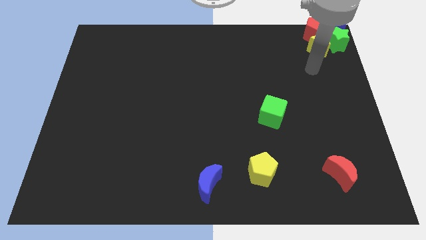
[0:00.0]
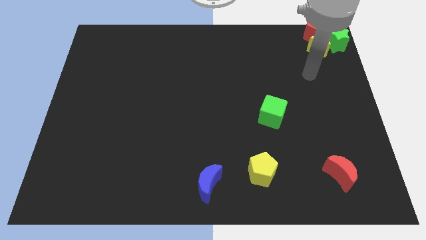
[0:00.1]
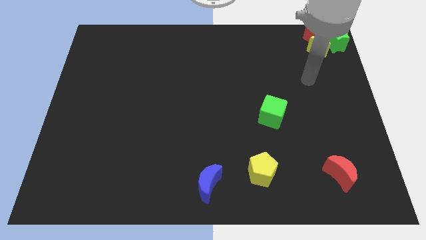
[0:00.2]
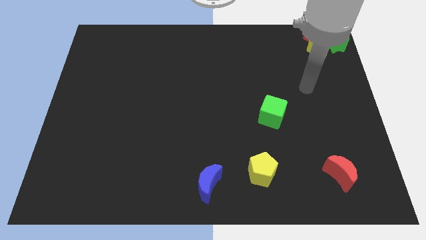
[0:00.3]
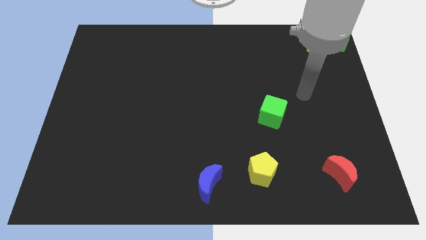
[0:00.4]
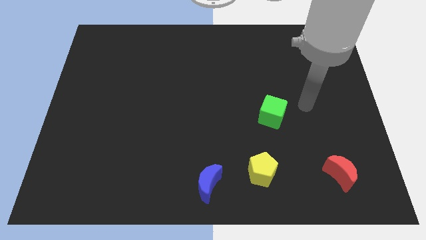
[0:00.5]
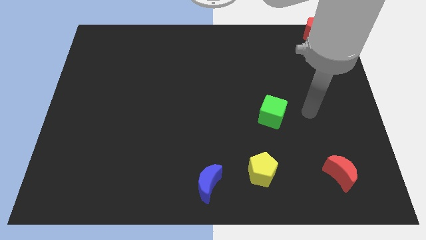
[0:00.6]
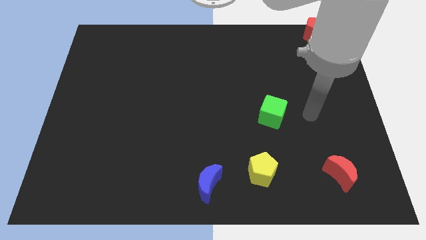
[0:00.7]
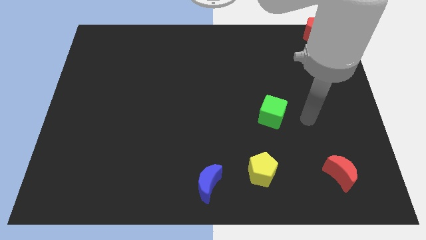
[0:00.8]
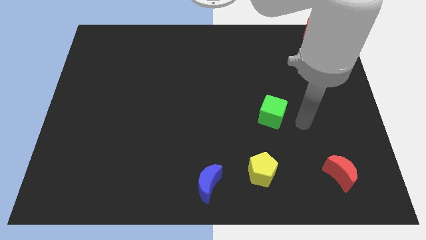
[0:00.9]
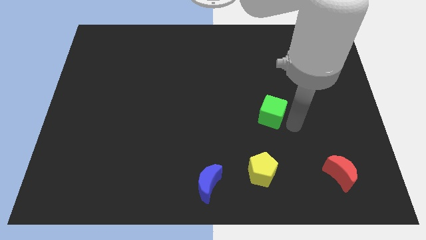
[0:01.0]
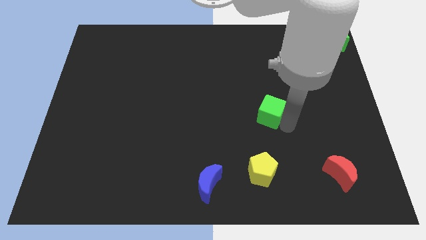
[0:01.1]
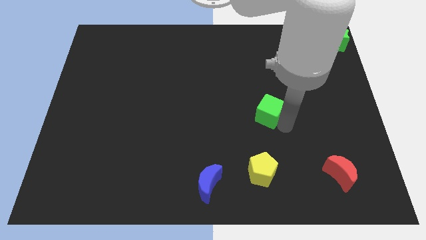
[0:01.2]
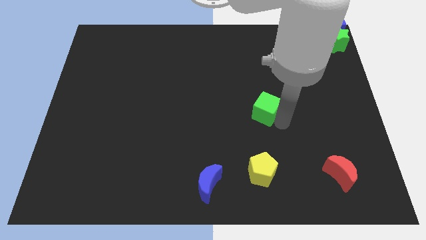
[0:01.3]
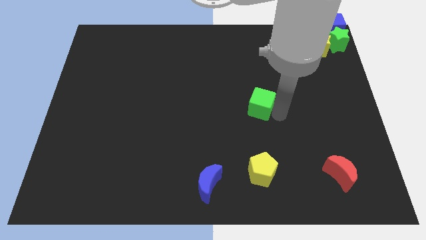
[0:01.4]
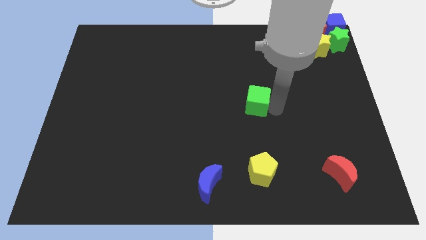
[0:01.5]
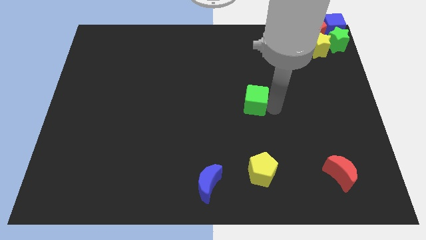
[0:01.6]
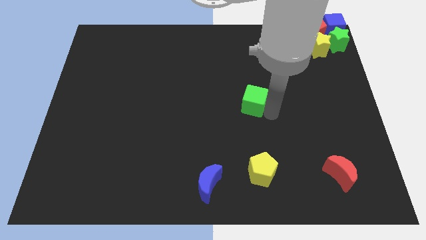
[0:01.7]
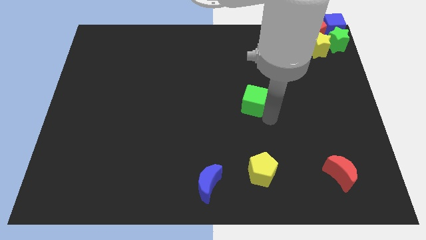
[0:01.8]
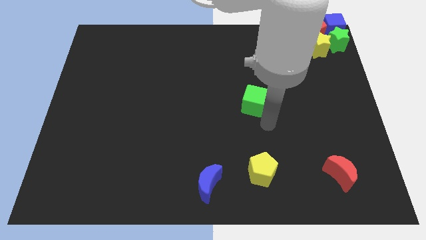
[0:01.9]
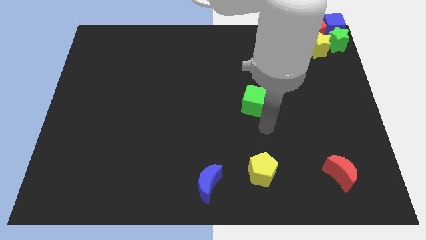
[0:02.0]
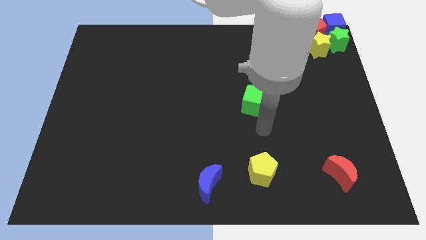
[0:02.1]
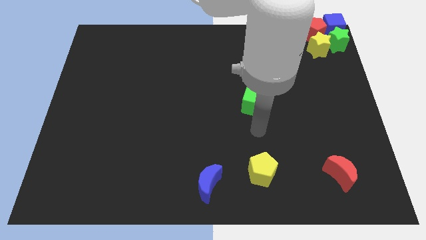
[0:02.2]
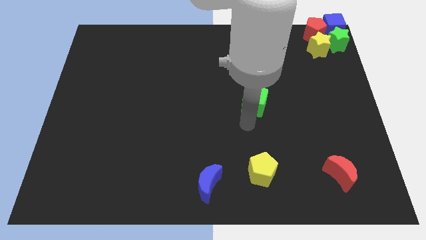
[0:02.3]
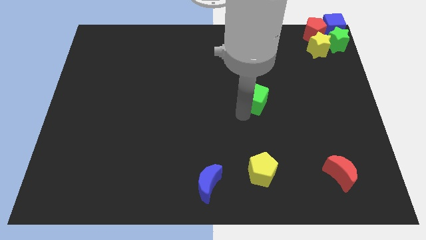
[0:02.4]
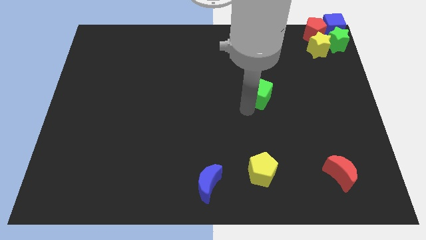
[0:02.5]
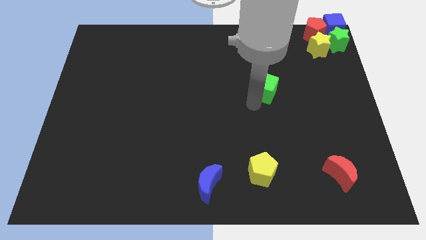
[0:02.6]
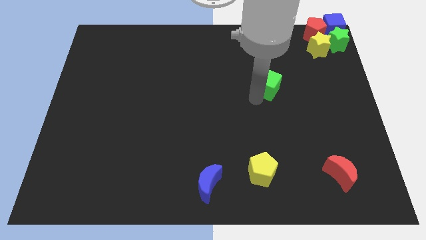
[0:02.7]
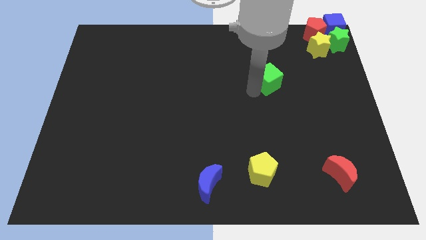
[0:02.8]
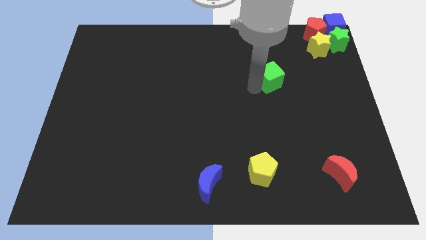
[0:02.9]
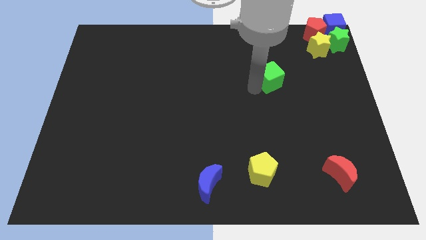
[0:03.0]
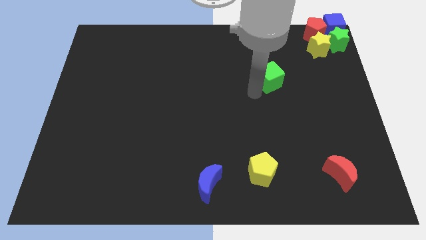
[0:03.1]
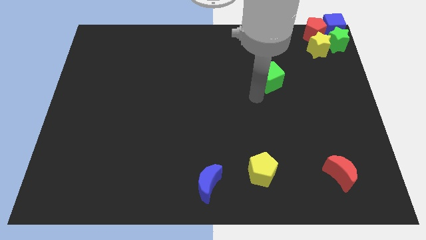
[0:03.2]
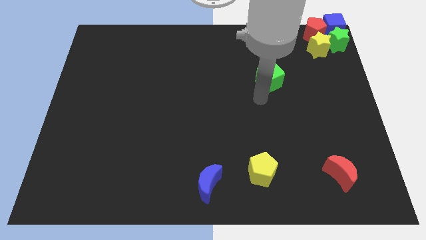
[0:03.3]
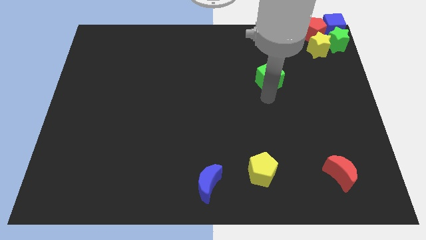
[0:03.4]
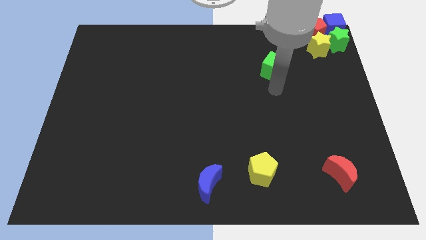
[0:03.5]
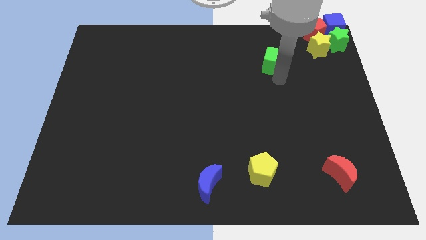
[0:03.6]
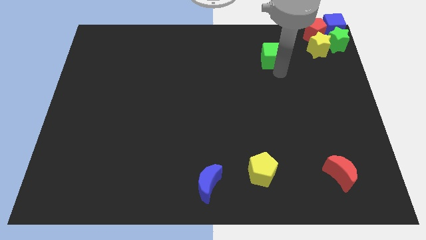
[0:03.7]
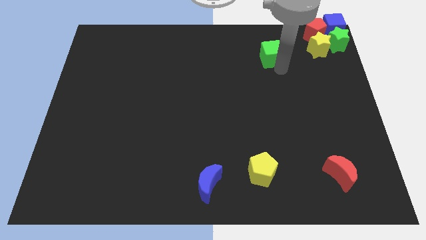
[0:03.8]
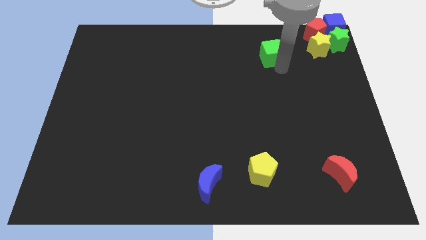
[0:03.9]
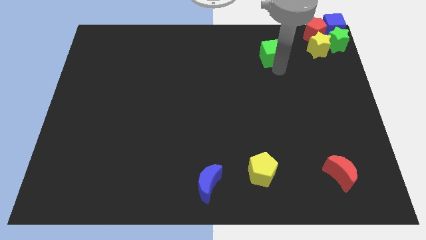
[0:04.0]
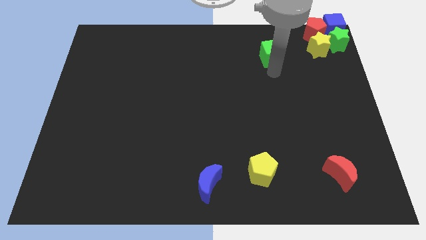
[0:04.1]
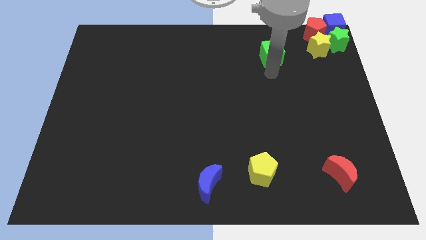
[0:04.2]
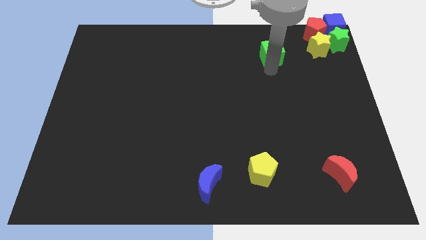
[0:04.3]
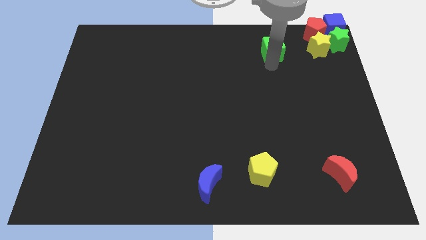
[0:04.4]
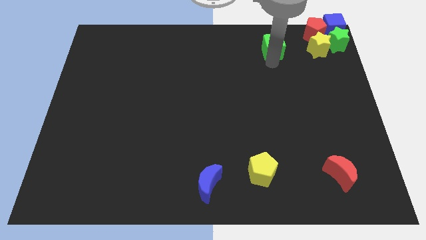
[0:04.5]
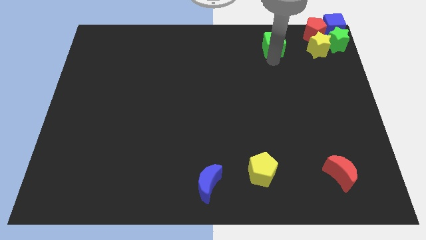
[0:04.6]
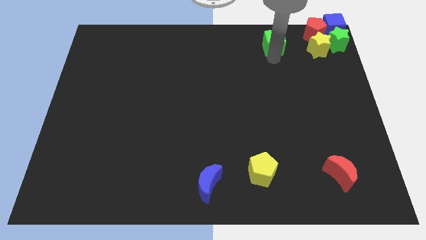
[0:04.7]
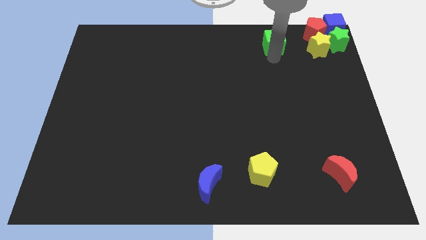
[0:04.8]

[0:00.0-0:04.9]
put the green cube left to the group of blocks

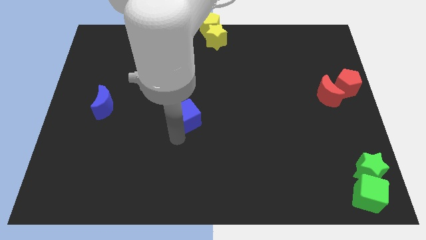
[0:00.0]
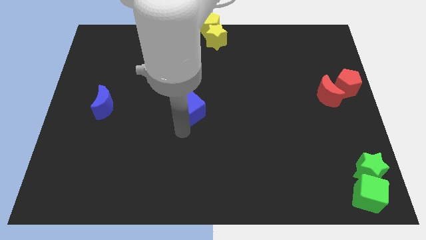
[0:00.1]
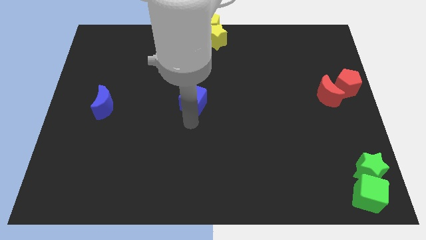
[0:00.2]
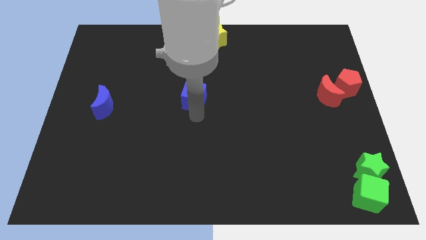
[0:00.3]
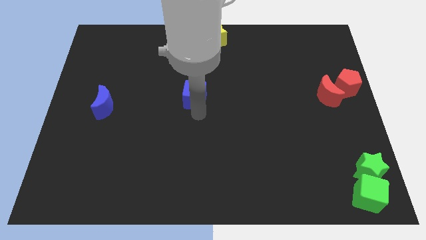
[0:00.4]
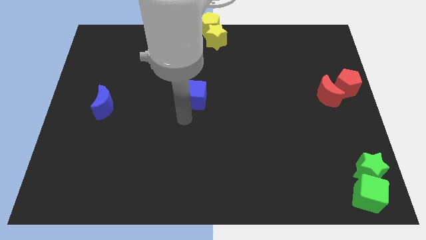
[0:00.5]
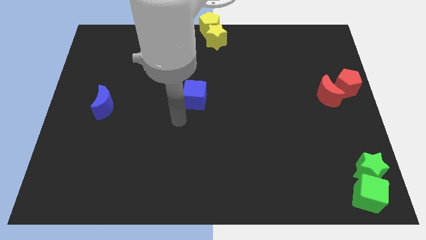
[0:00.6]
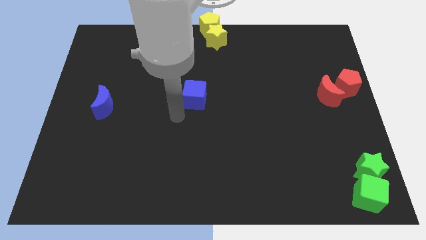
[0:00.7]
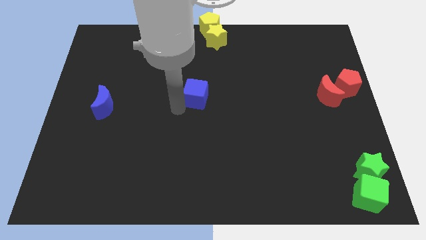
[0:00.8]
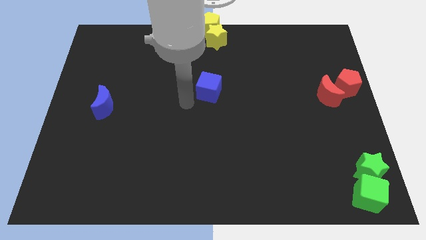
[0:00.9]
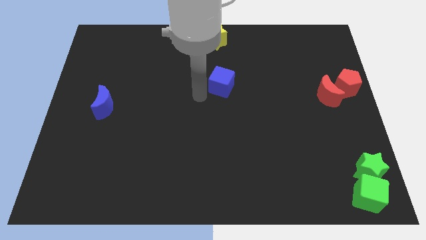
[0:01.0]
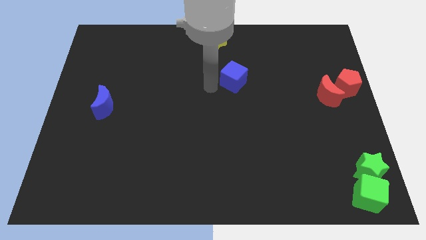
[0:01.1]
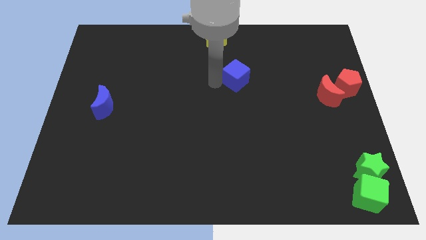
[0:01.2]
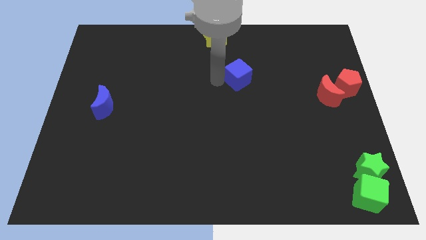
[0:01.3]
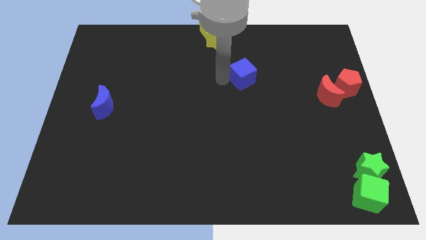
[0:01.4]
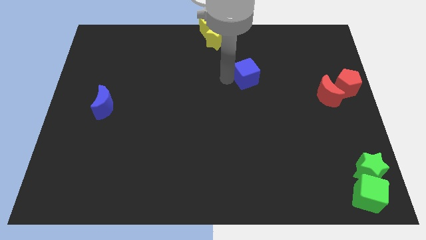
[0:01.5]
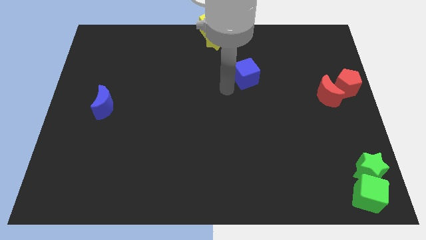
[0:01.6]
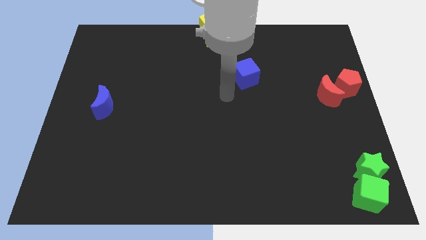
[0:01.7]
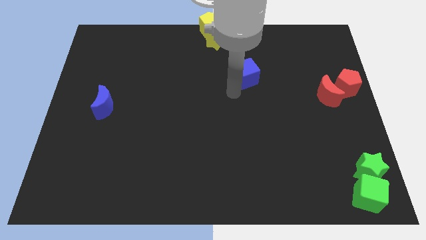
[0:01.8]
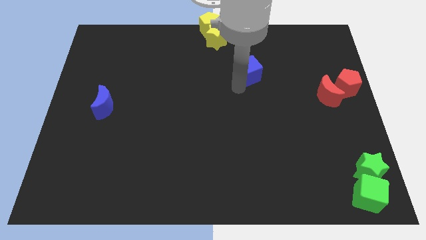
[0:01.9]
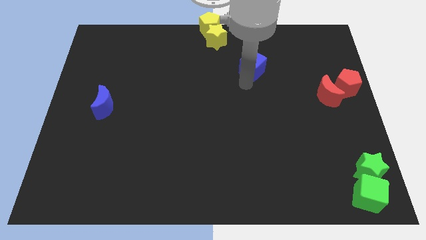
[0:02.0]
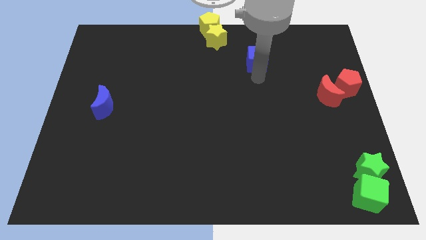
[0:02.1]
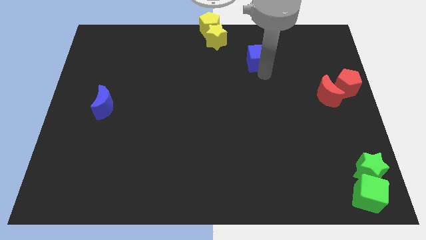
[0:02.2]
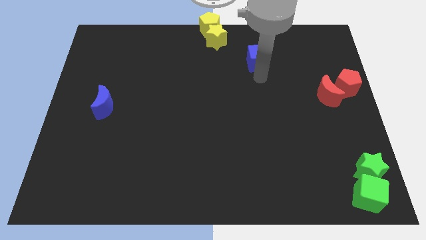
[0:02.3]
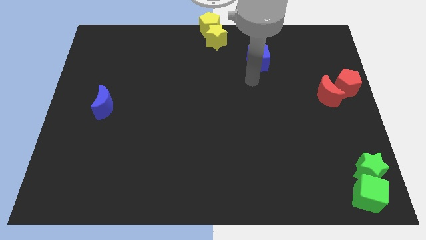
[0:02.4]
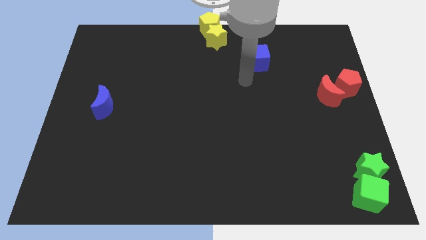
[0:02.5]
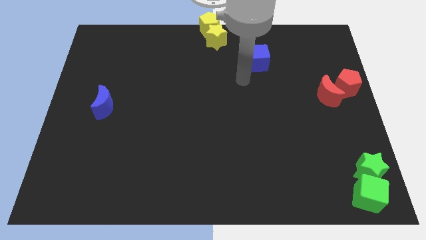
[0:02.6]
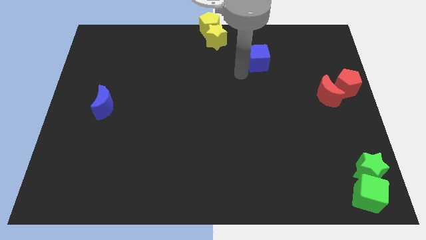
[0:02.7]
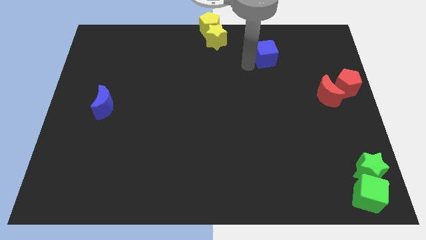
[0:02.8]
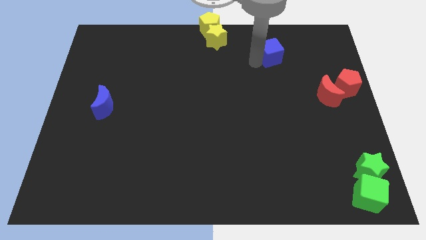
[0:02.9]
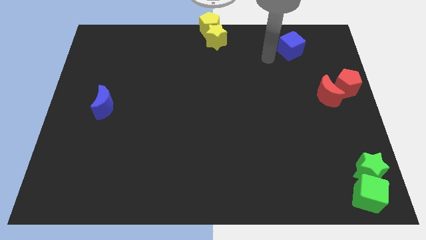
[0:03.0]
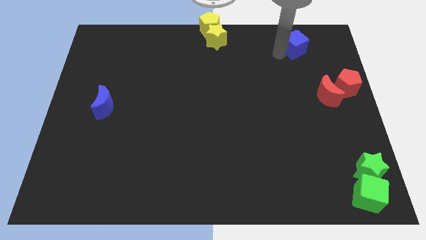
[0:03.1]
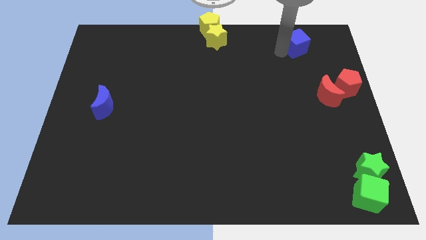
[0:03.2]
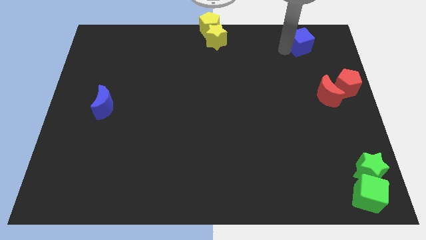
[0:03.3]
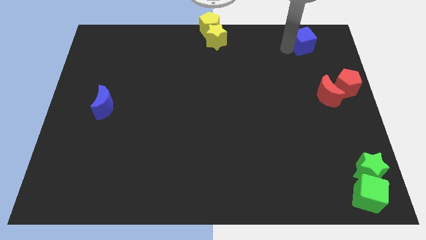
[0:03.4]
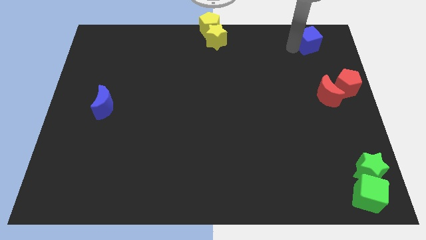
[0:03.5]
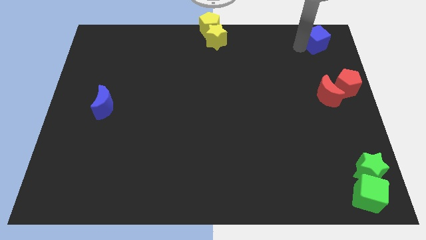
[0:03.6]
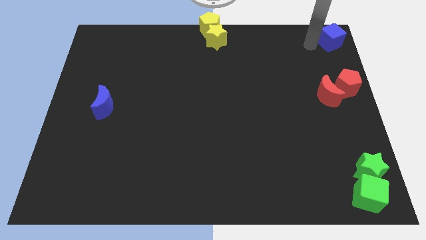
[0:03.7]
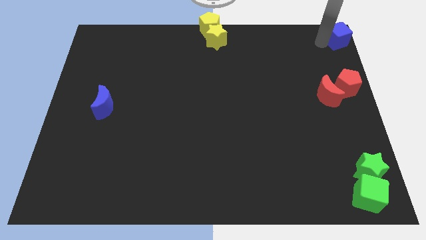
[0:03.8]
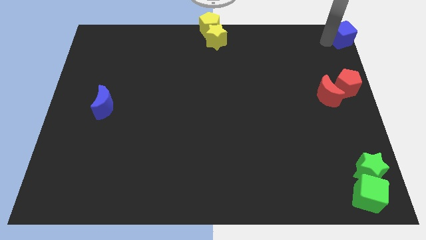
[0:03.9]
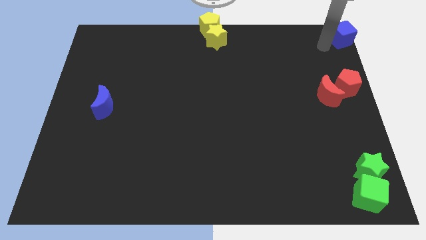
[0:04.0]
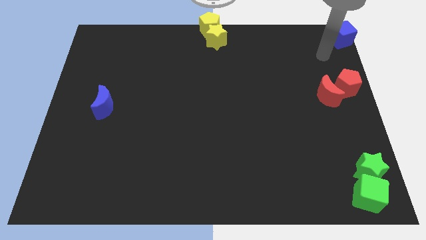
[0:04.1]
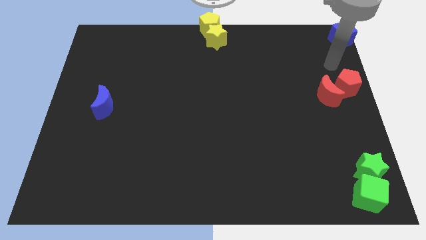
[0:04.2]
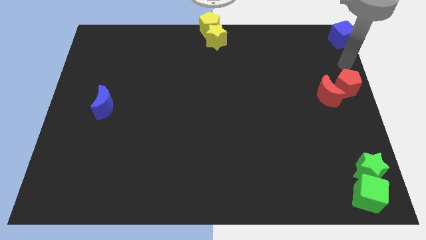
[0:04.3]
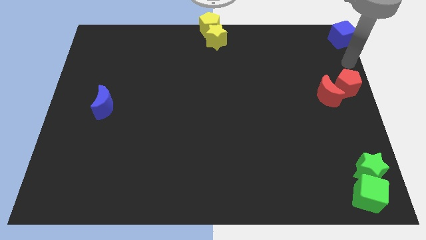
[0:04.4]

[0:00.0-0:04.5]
move the blue cube towards the top right corner
